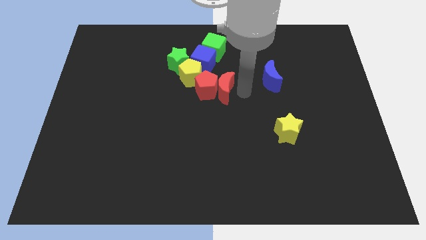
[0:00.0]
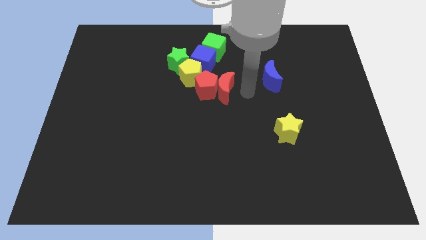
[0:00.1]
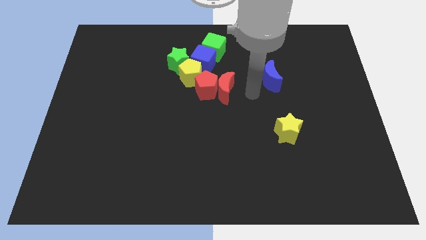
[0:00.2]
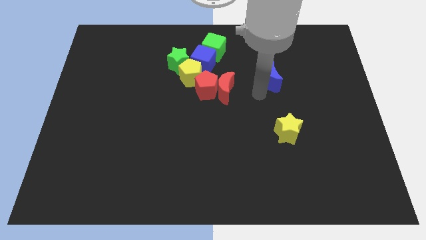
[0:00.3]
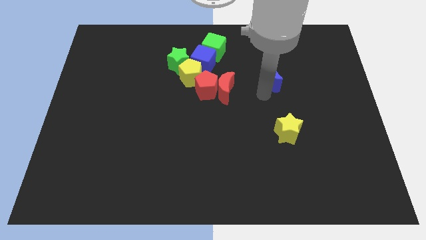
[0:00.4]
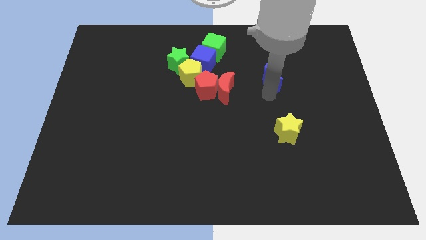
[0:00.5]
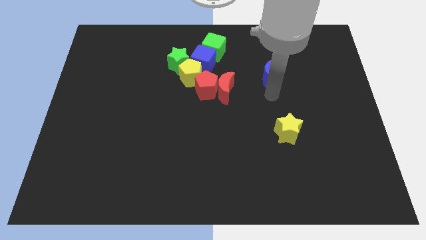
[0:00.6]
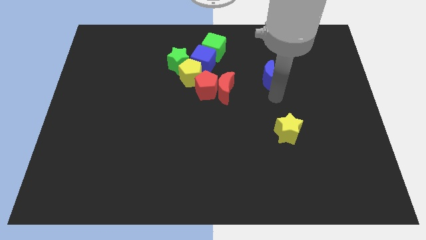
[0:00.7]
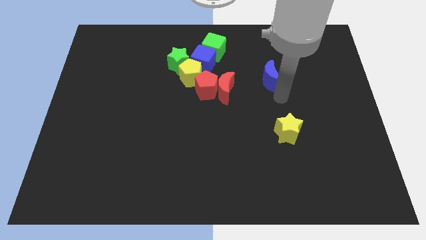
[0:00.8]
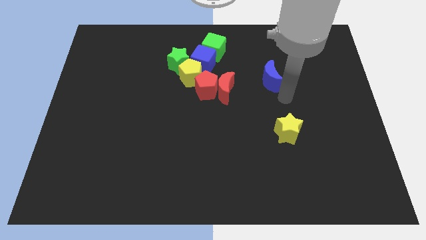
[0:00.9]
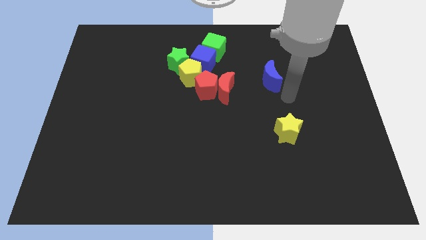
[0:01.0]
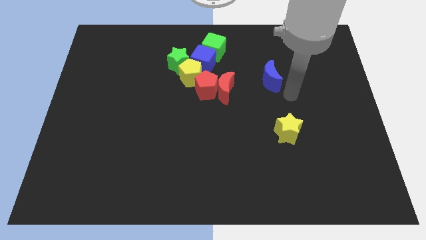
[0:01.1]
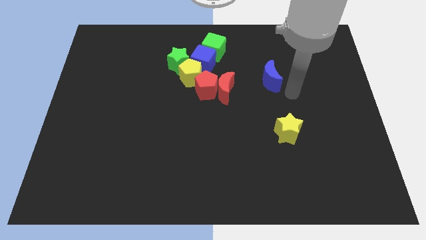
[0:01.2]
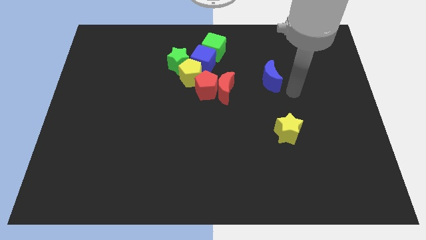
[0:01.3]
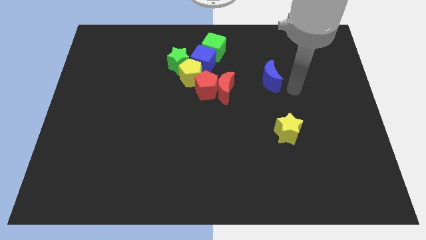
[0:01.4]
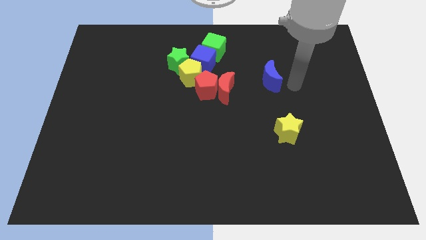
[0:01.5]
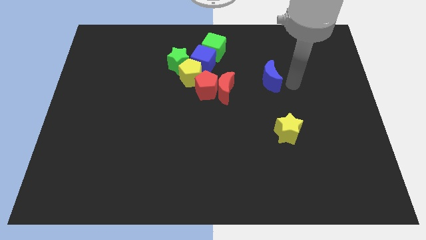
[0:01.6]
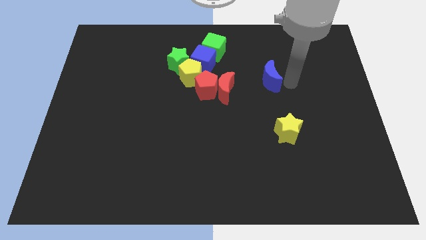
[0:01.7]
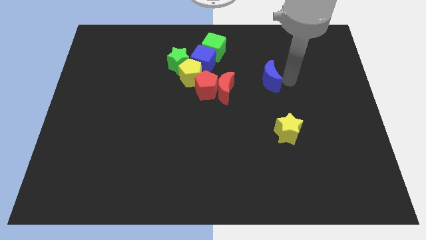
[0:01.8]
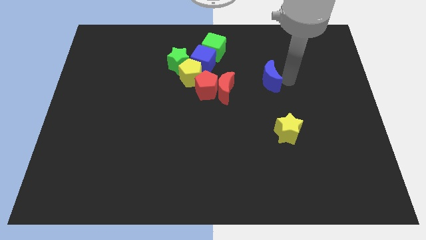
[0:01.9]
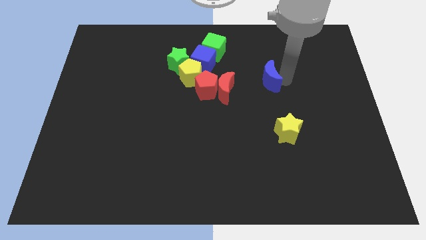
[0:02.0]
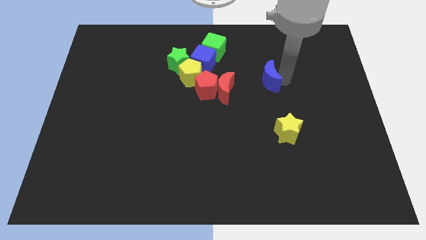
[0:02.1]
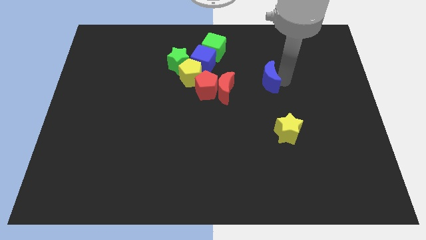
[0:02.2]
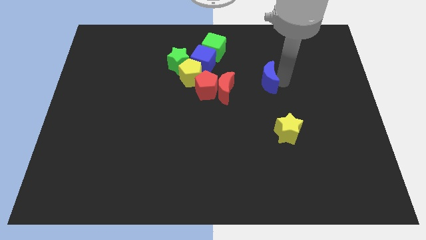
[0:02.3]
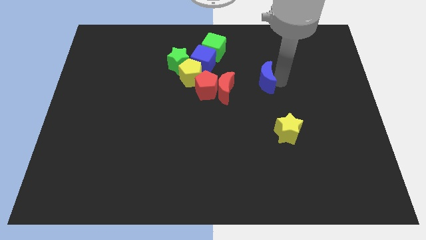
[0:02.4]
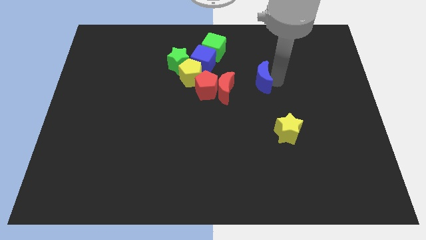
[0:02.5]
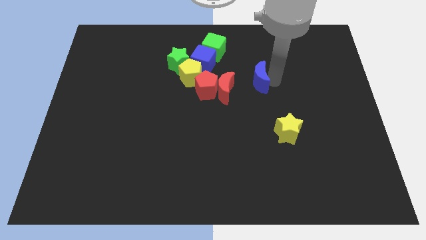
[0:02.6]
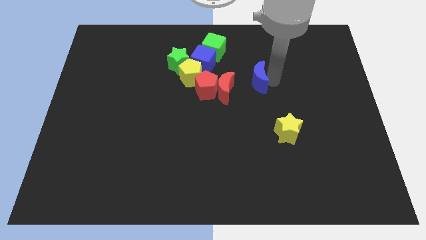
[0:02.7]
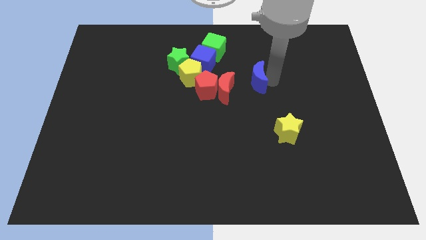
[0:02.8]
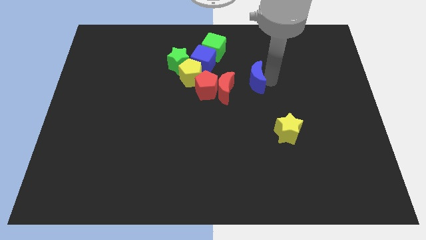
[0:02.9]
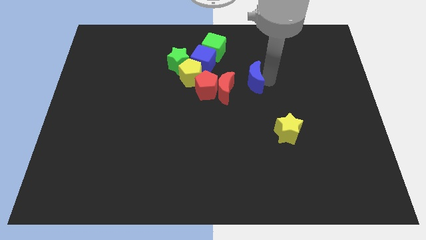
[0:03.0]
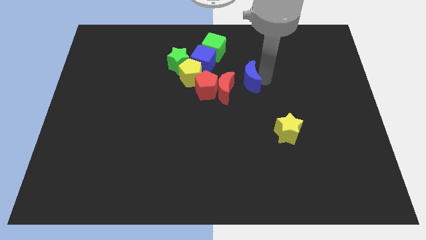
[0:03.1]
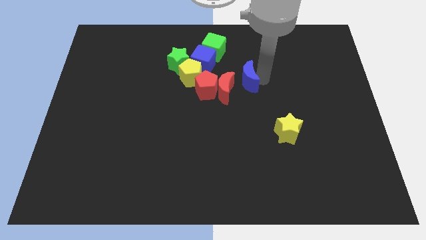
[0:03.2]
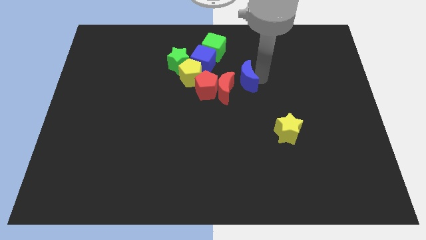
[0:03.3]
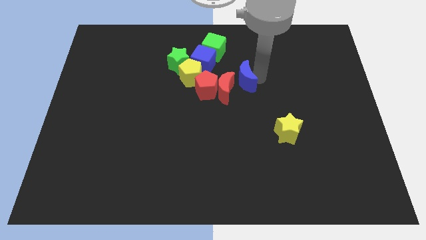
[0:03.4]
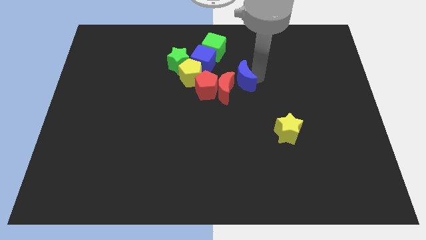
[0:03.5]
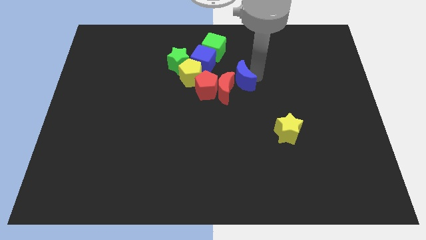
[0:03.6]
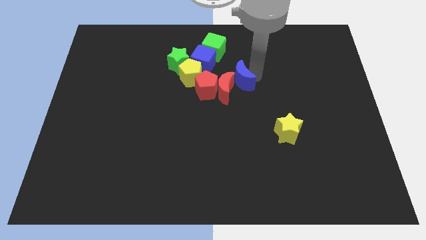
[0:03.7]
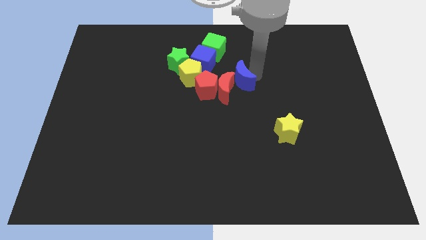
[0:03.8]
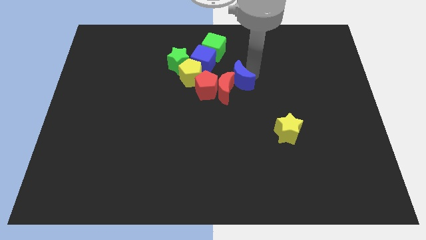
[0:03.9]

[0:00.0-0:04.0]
move the blue crescent to the right of the red crescent

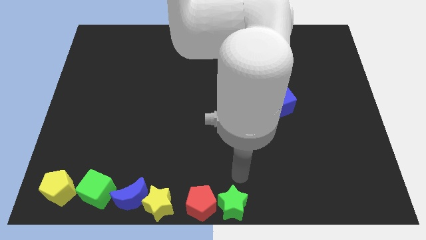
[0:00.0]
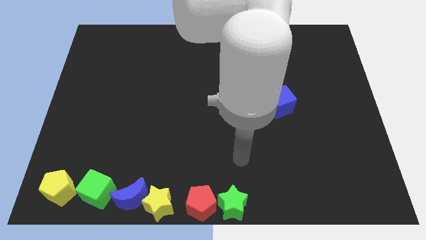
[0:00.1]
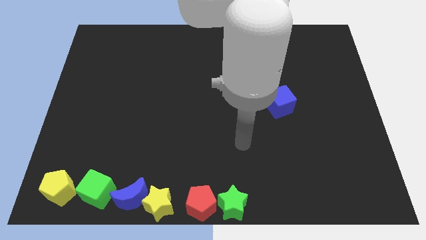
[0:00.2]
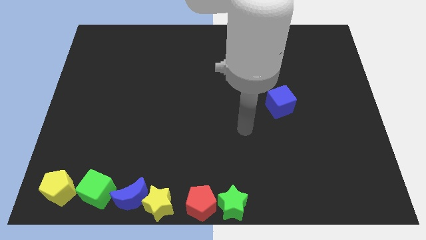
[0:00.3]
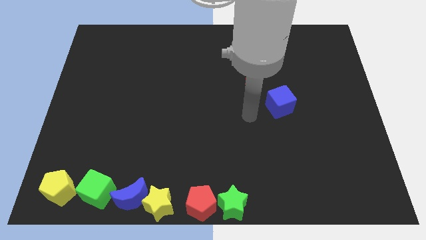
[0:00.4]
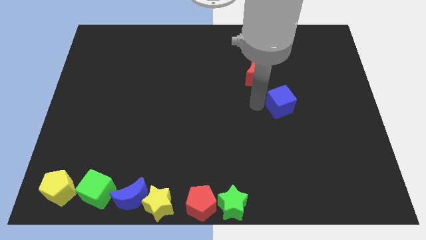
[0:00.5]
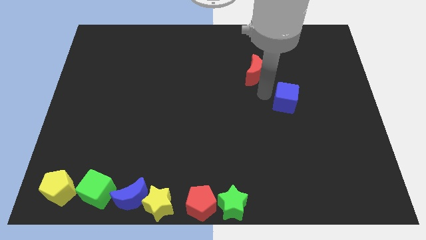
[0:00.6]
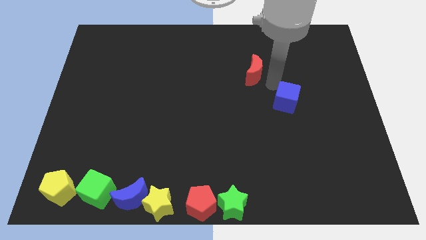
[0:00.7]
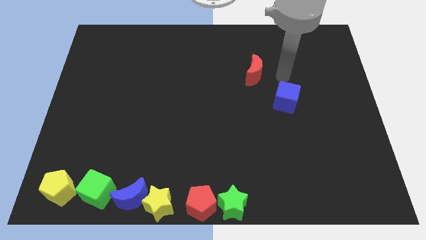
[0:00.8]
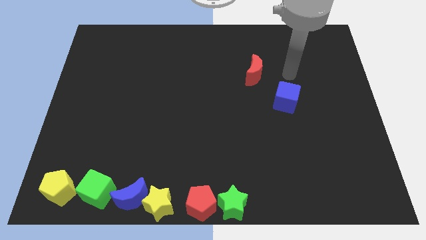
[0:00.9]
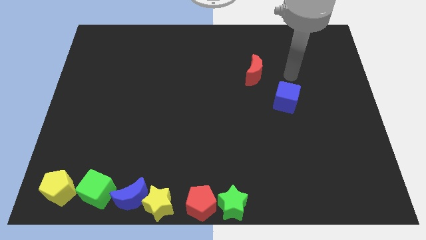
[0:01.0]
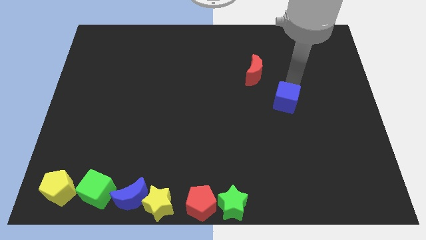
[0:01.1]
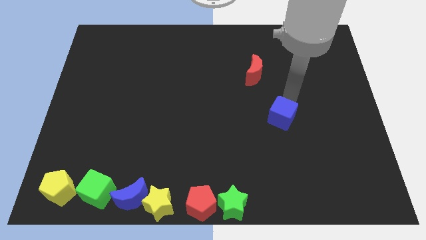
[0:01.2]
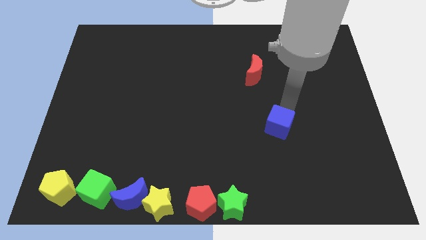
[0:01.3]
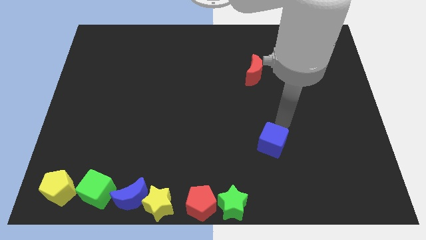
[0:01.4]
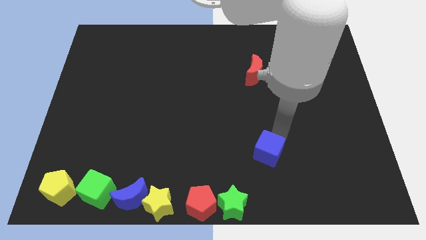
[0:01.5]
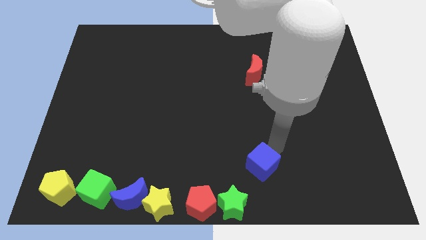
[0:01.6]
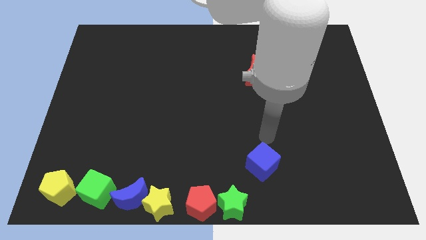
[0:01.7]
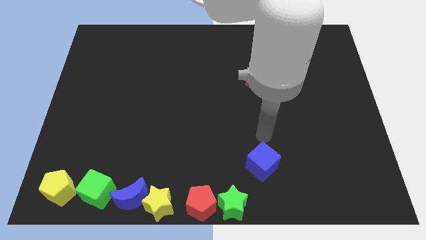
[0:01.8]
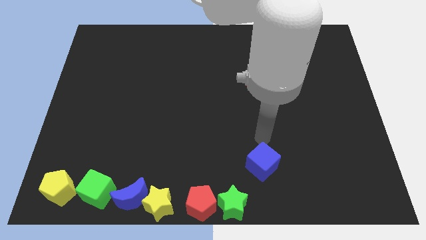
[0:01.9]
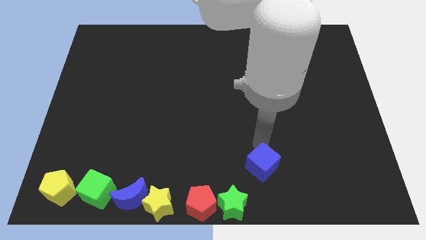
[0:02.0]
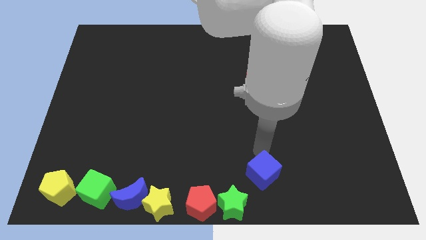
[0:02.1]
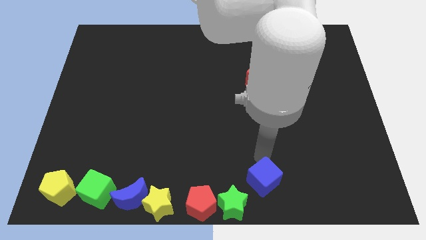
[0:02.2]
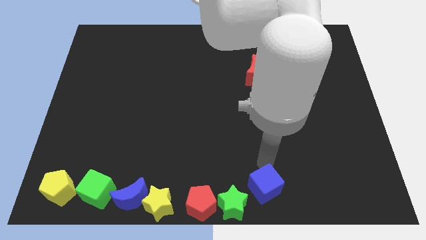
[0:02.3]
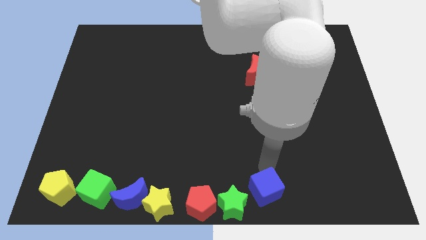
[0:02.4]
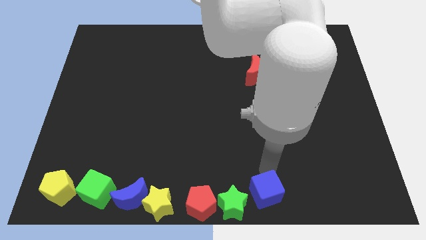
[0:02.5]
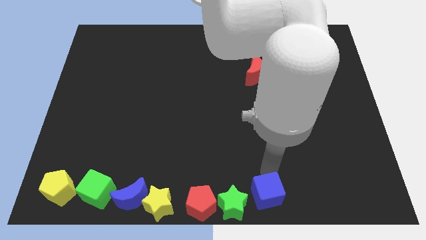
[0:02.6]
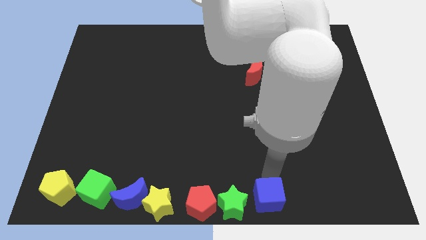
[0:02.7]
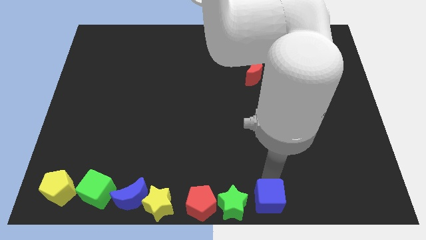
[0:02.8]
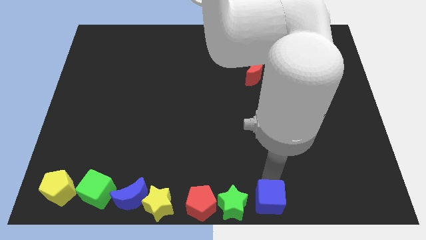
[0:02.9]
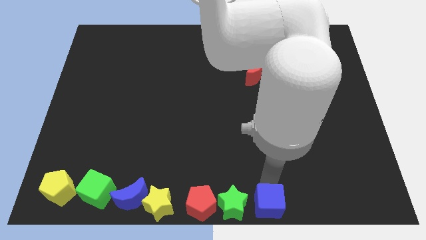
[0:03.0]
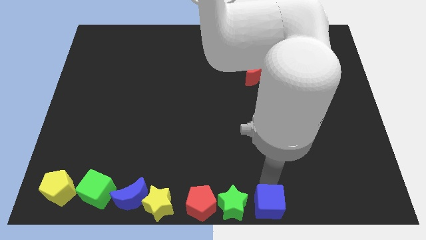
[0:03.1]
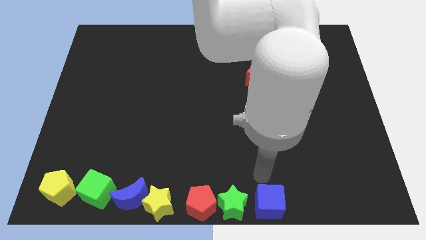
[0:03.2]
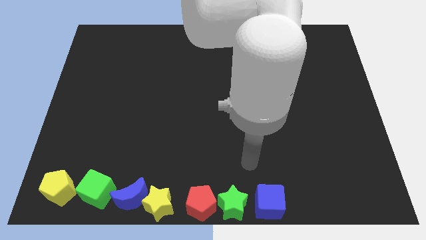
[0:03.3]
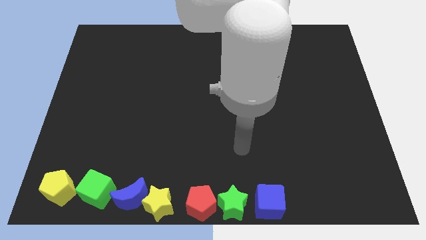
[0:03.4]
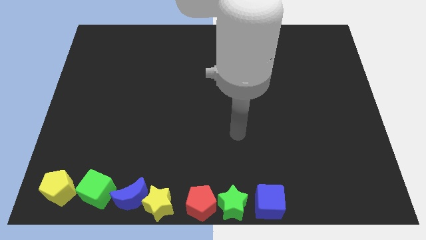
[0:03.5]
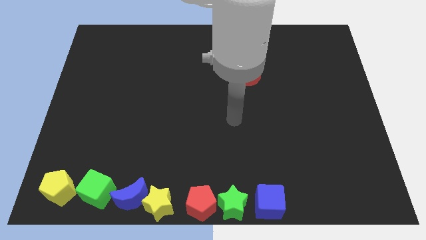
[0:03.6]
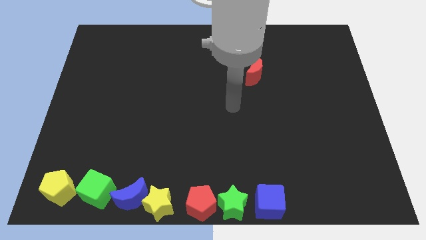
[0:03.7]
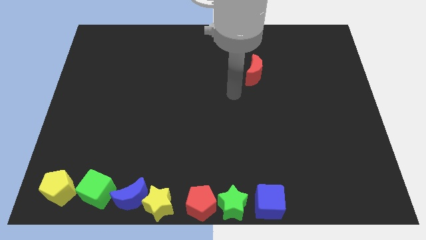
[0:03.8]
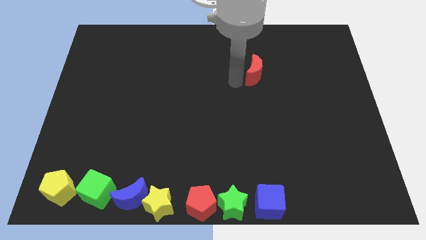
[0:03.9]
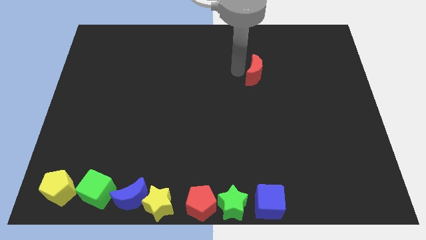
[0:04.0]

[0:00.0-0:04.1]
push the blue cube to the right of the green star

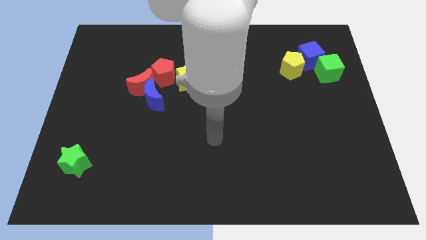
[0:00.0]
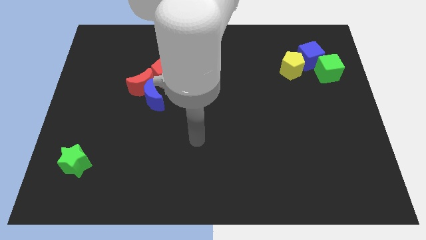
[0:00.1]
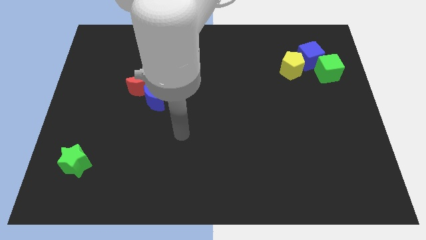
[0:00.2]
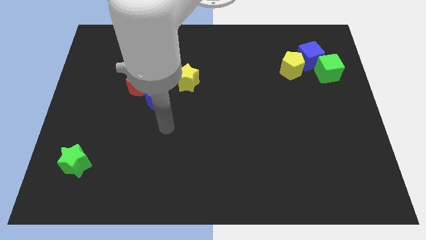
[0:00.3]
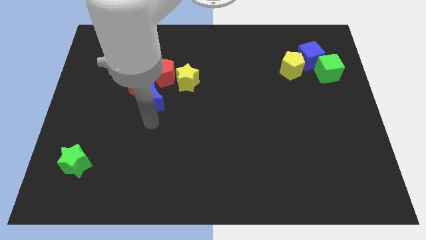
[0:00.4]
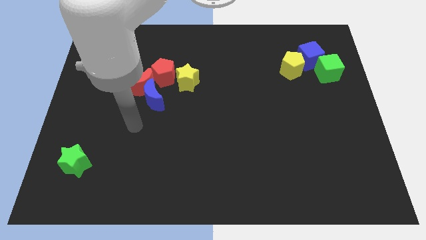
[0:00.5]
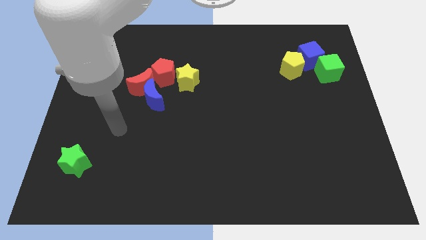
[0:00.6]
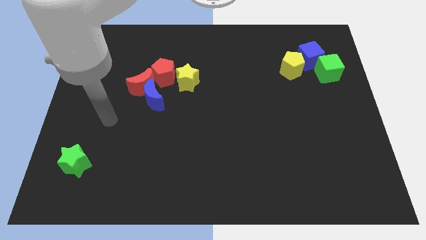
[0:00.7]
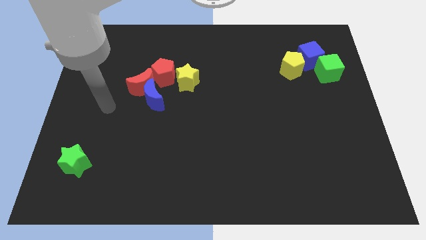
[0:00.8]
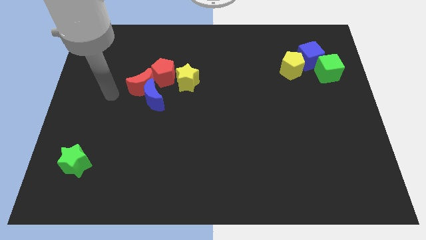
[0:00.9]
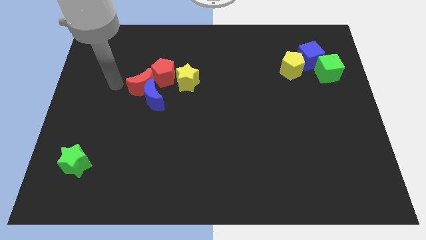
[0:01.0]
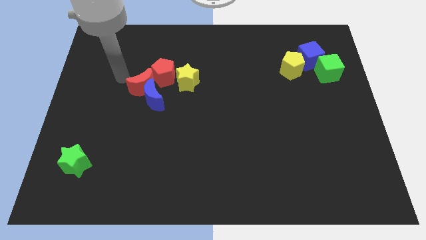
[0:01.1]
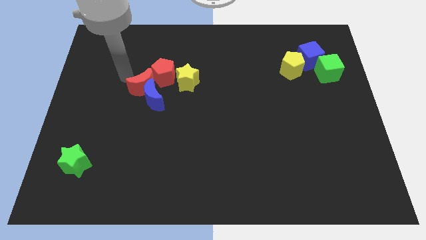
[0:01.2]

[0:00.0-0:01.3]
point your arm to the left side of red moon
